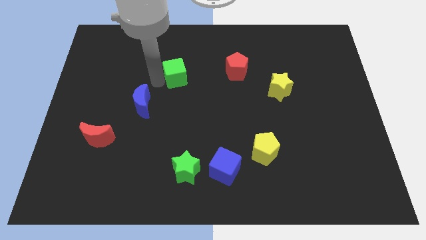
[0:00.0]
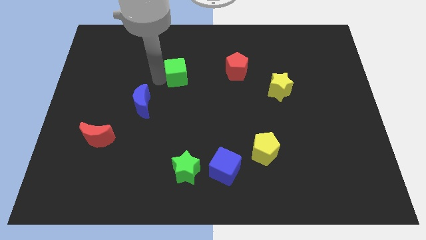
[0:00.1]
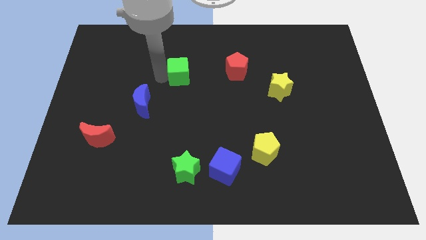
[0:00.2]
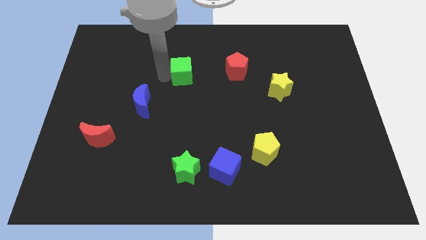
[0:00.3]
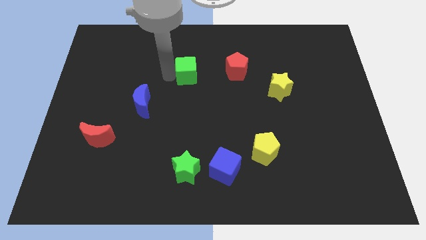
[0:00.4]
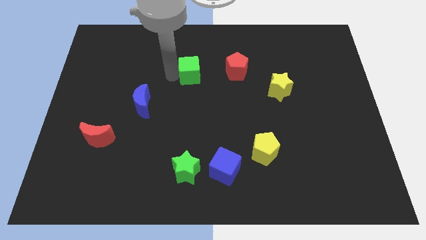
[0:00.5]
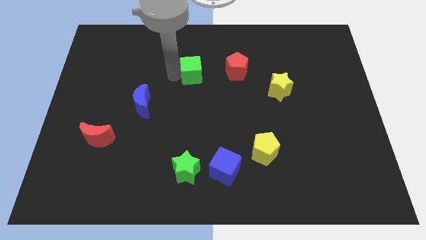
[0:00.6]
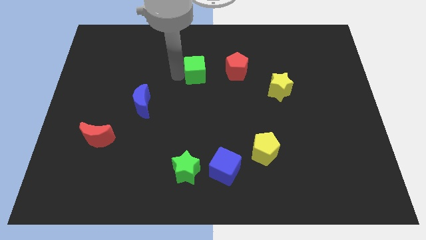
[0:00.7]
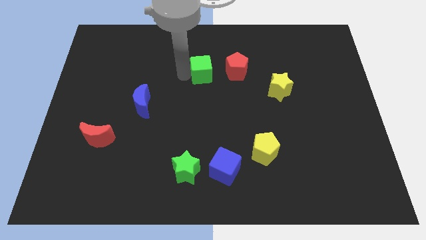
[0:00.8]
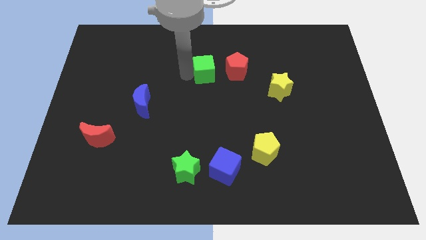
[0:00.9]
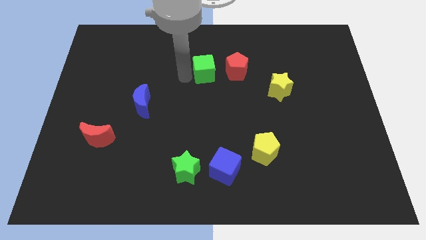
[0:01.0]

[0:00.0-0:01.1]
move green cube towards red pentagon

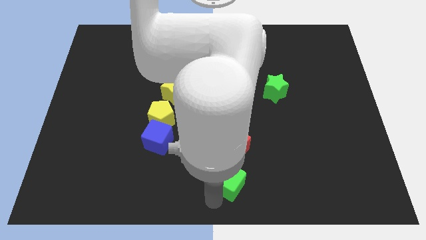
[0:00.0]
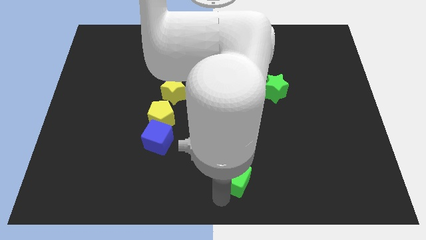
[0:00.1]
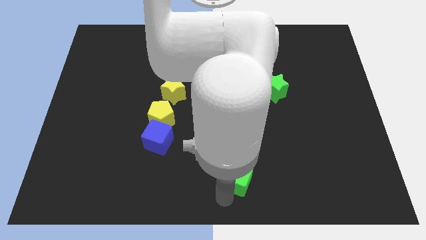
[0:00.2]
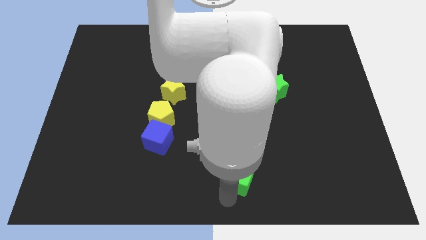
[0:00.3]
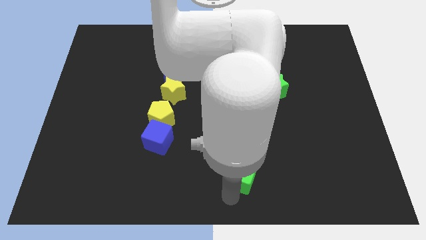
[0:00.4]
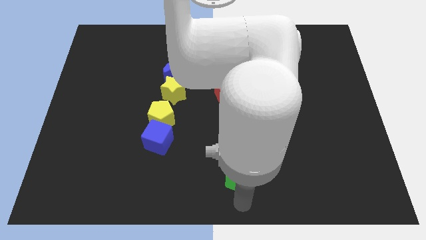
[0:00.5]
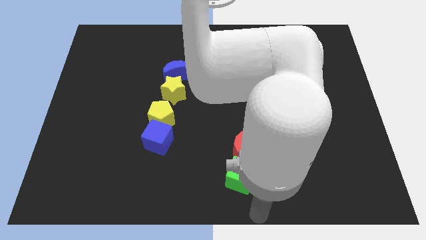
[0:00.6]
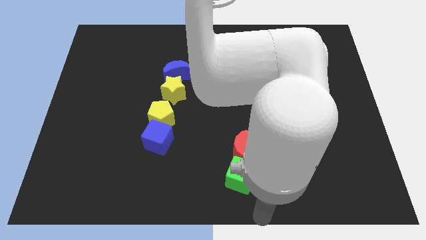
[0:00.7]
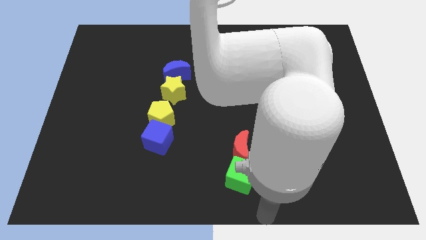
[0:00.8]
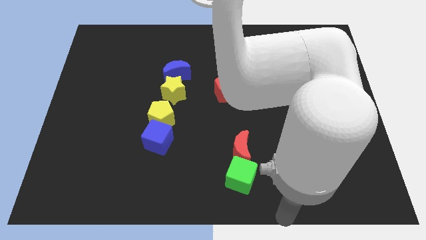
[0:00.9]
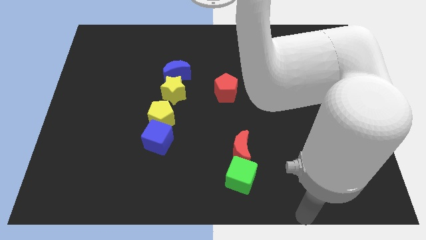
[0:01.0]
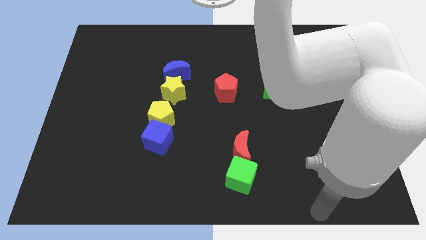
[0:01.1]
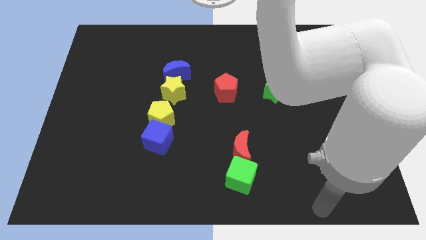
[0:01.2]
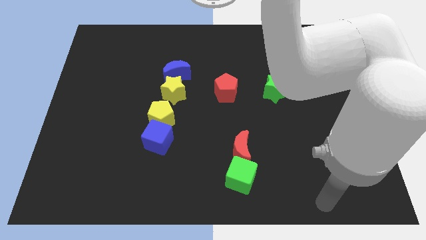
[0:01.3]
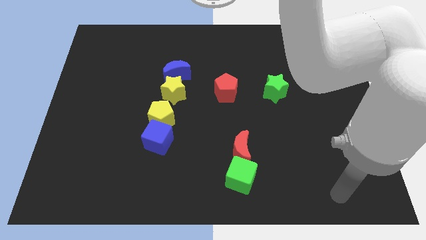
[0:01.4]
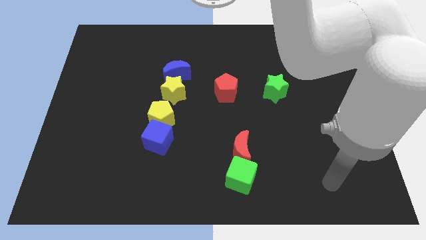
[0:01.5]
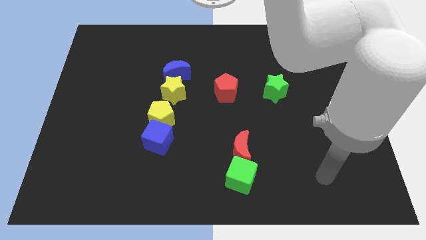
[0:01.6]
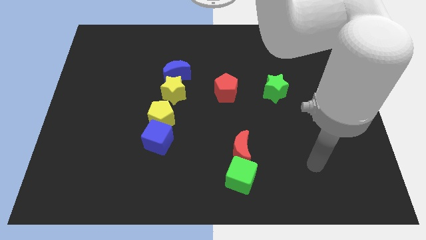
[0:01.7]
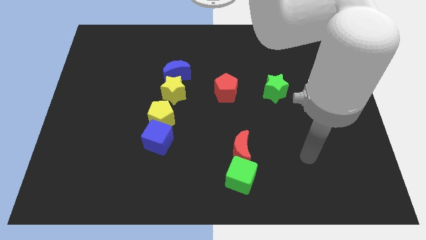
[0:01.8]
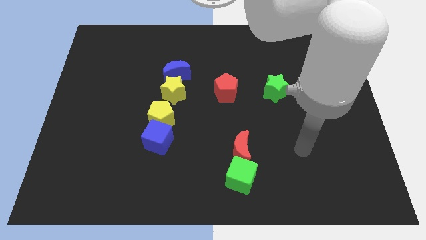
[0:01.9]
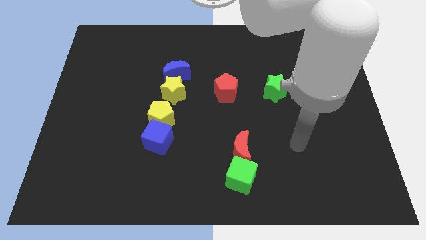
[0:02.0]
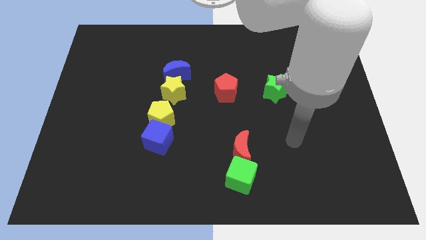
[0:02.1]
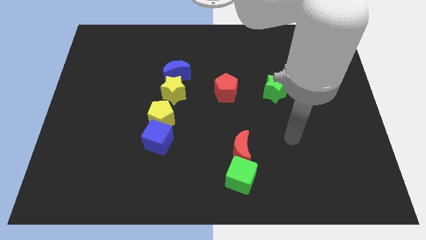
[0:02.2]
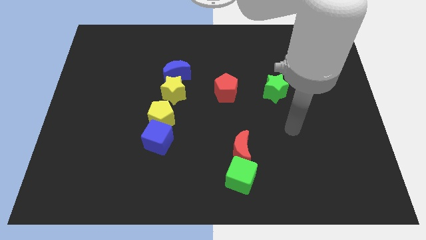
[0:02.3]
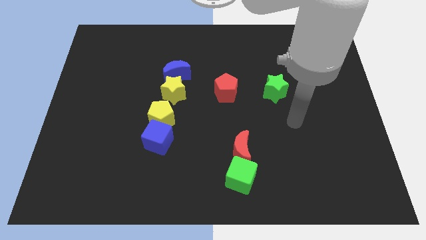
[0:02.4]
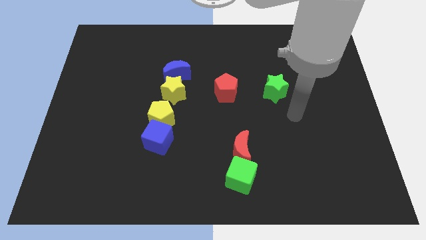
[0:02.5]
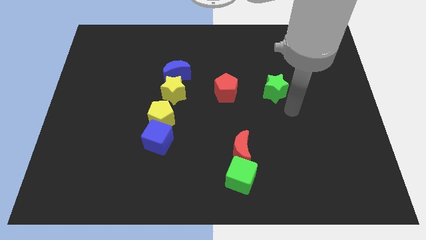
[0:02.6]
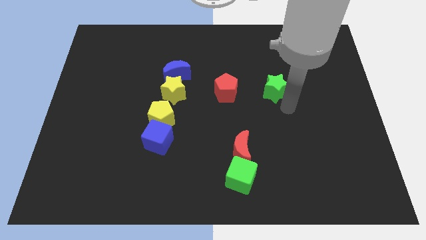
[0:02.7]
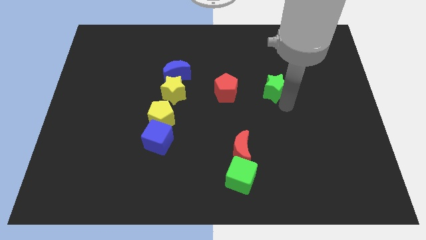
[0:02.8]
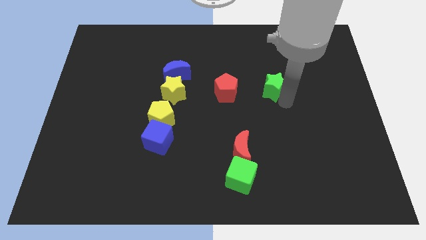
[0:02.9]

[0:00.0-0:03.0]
slightly push the green cube into the red crescent

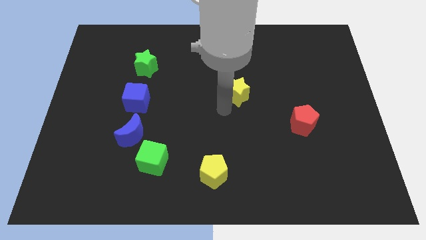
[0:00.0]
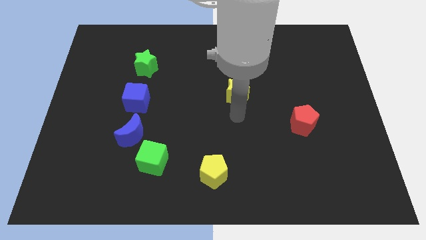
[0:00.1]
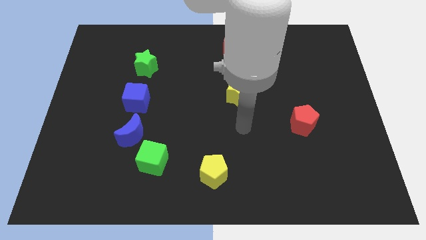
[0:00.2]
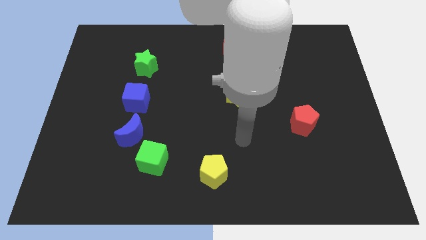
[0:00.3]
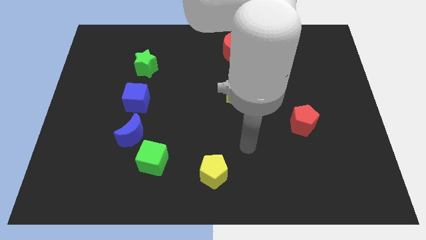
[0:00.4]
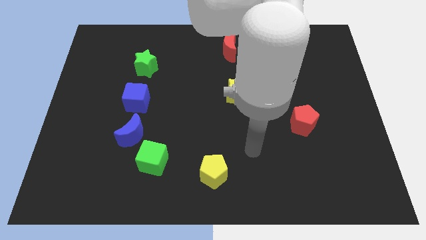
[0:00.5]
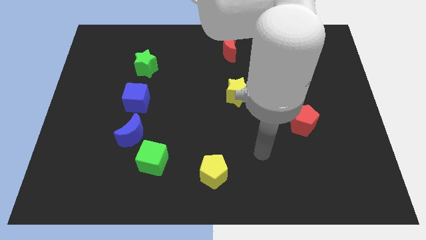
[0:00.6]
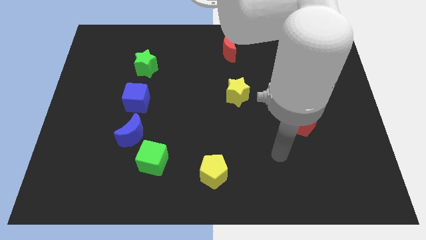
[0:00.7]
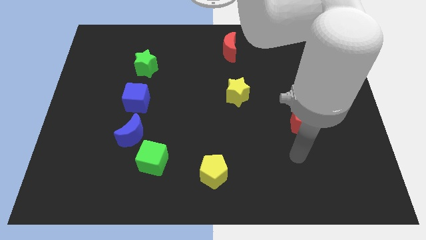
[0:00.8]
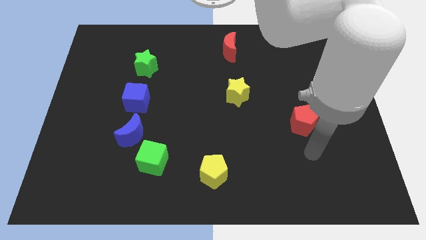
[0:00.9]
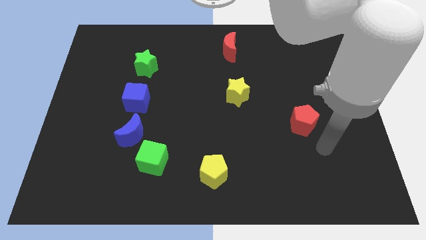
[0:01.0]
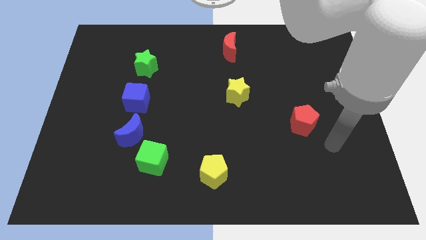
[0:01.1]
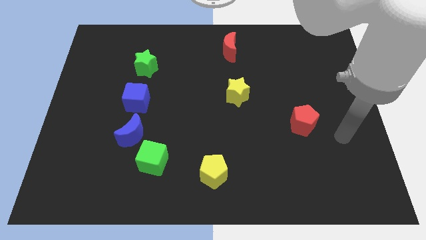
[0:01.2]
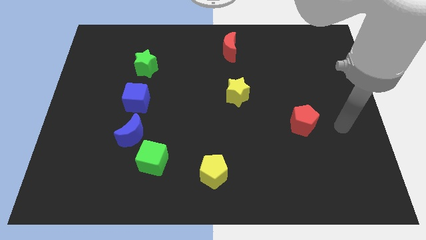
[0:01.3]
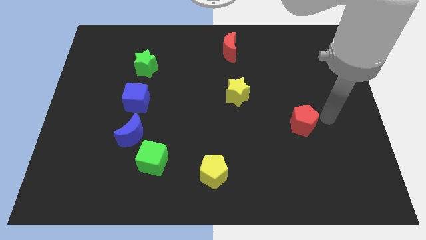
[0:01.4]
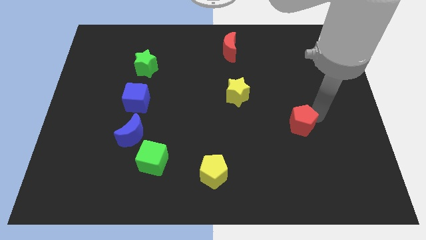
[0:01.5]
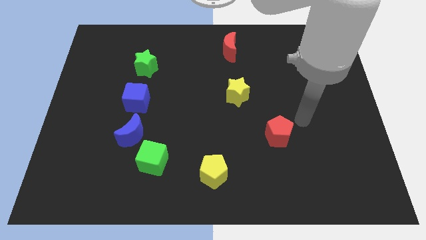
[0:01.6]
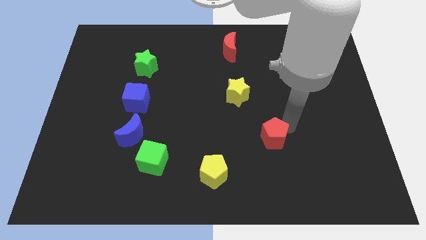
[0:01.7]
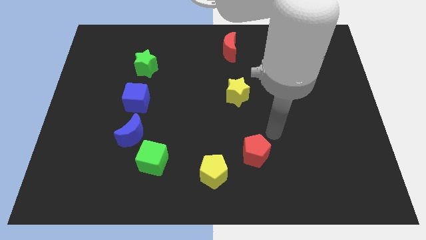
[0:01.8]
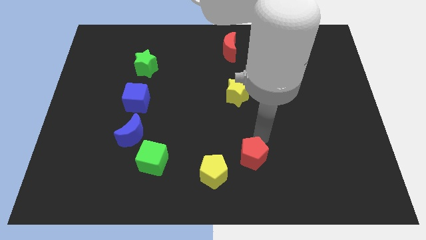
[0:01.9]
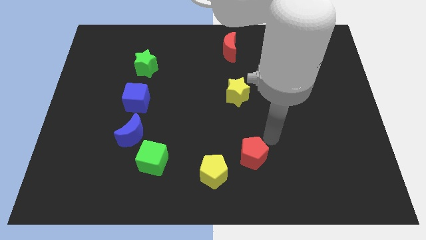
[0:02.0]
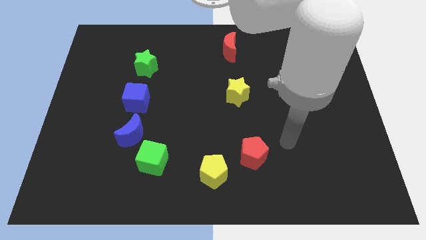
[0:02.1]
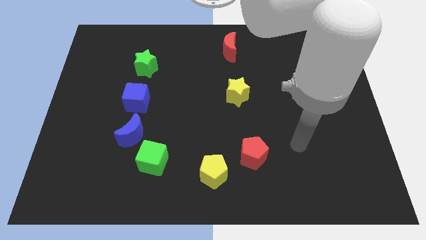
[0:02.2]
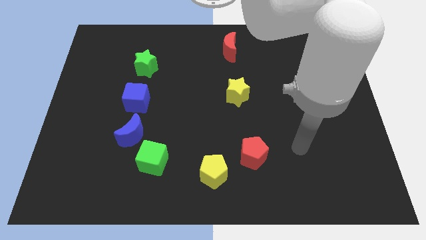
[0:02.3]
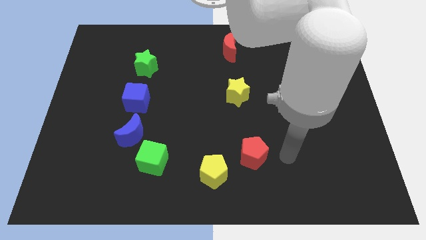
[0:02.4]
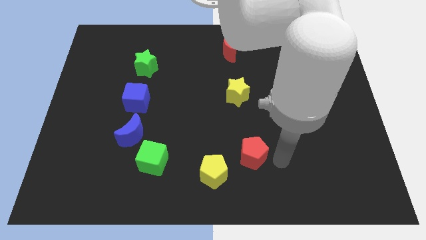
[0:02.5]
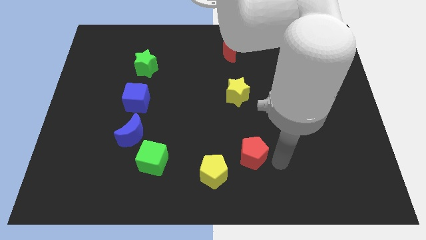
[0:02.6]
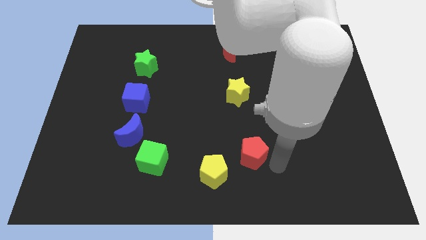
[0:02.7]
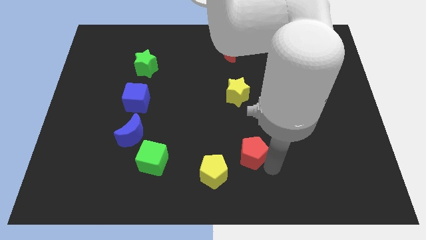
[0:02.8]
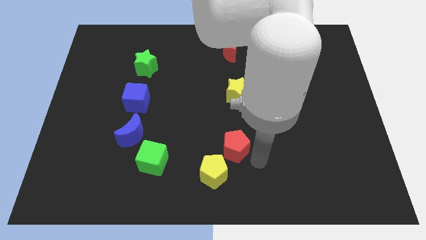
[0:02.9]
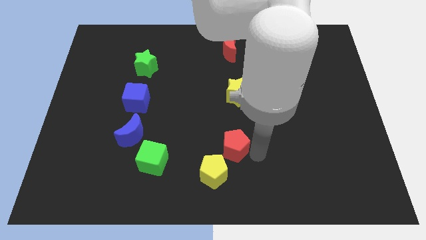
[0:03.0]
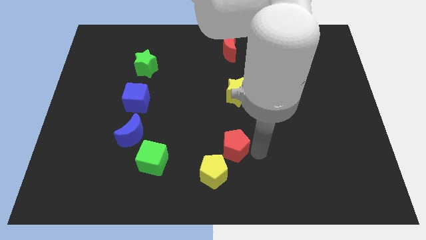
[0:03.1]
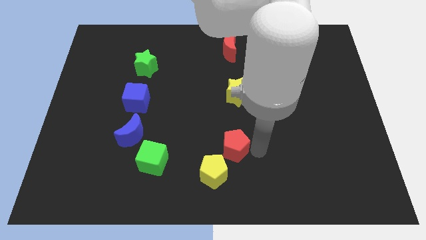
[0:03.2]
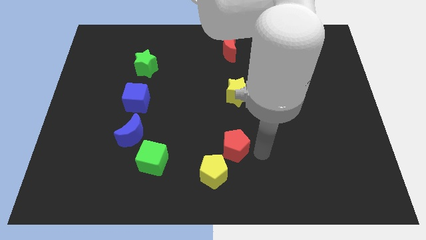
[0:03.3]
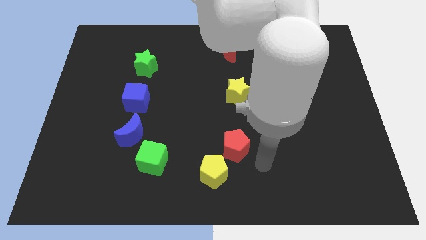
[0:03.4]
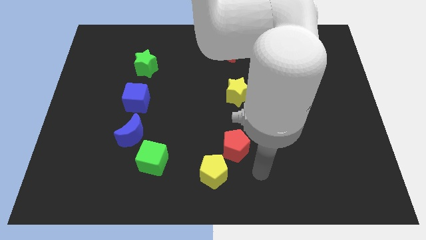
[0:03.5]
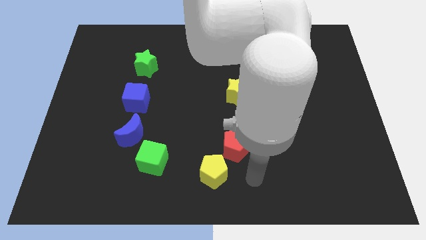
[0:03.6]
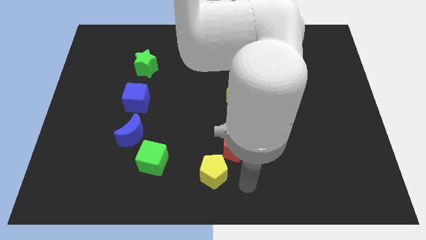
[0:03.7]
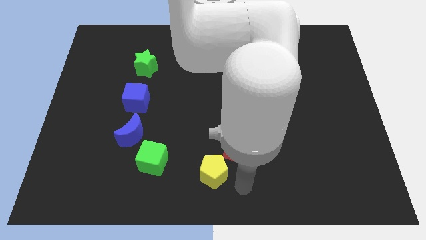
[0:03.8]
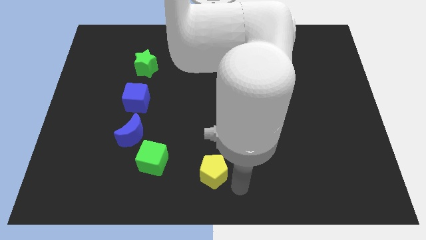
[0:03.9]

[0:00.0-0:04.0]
place the red pentagon above the yellow pentagon

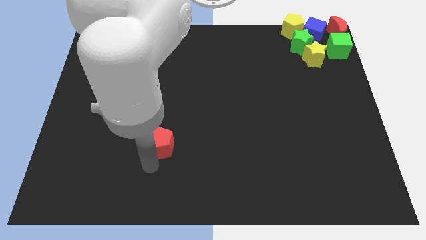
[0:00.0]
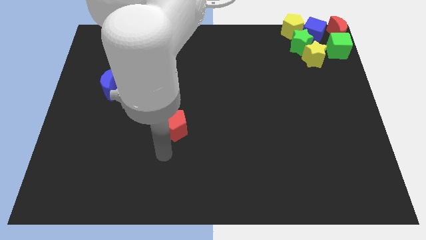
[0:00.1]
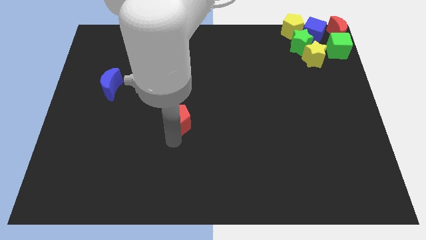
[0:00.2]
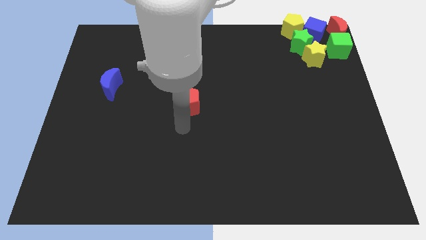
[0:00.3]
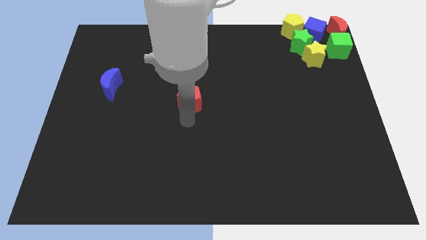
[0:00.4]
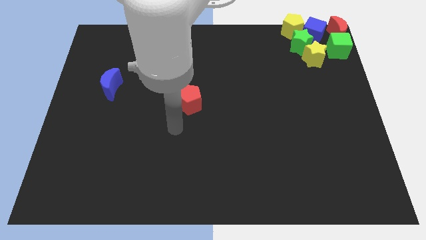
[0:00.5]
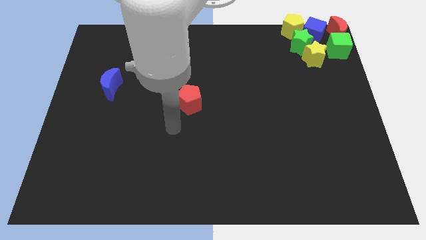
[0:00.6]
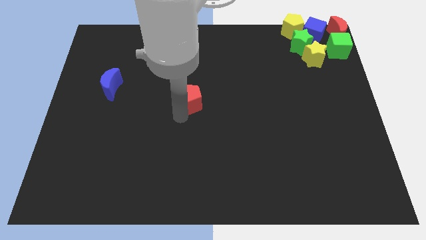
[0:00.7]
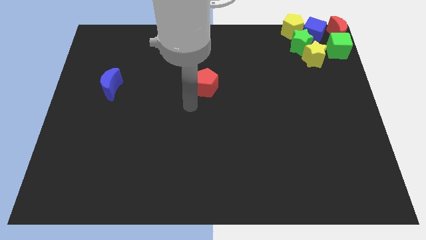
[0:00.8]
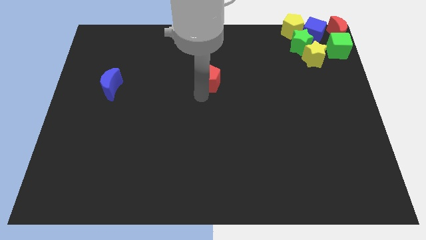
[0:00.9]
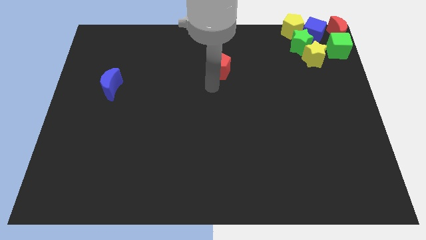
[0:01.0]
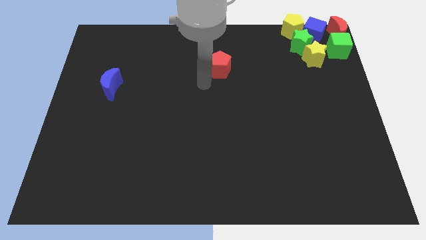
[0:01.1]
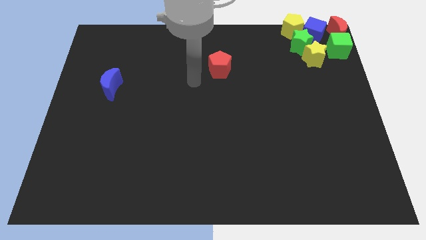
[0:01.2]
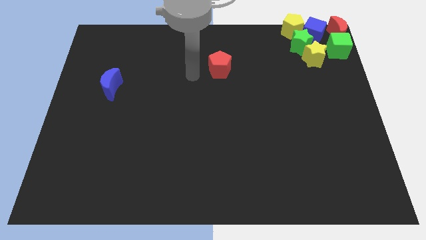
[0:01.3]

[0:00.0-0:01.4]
push red pentagon towards the top
